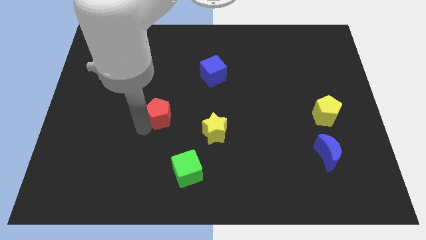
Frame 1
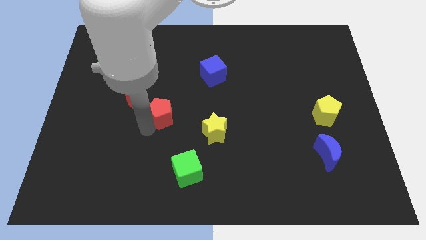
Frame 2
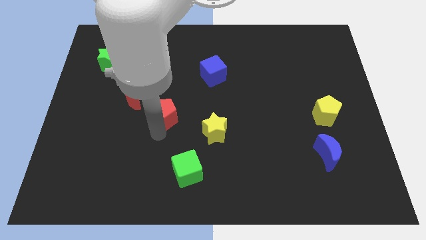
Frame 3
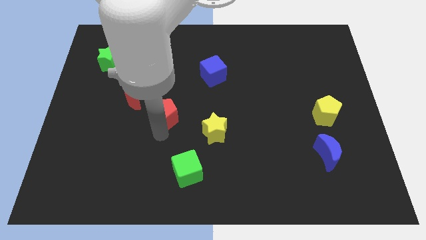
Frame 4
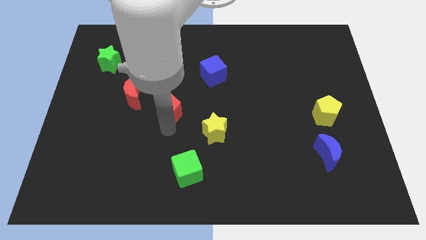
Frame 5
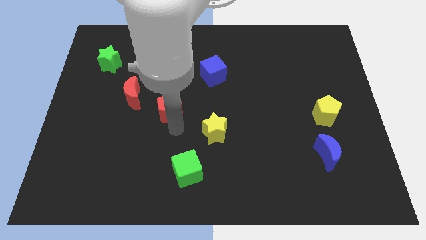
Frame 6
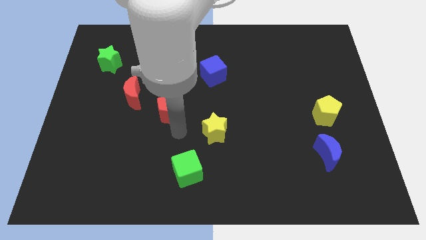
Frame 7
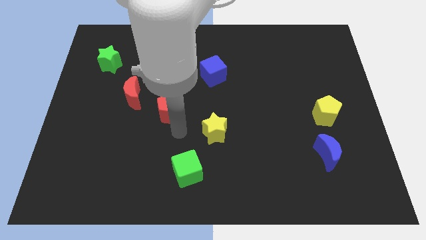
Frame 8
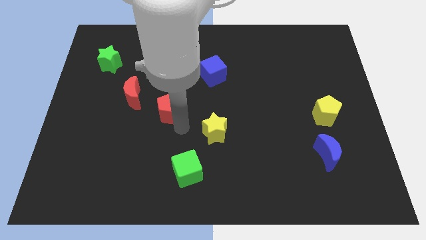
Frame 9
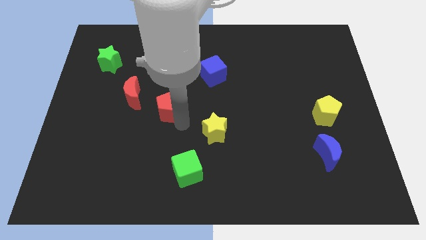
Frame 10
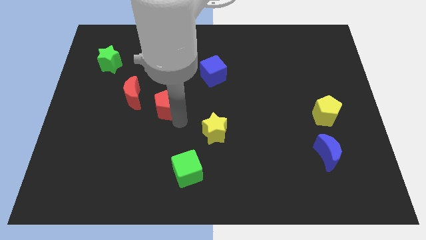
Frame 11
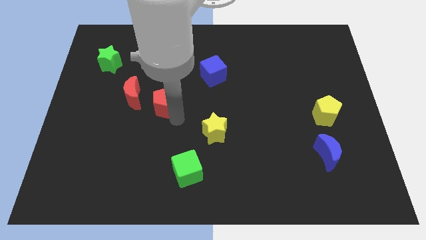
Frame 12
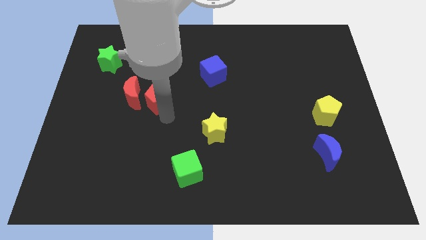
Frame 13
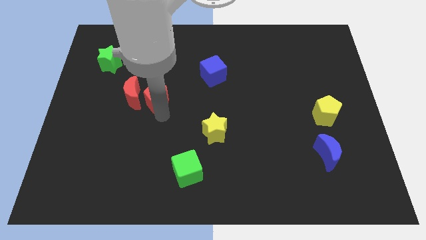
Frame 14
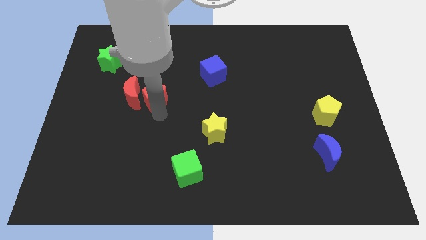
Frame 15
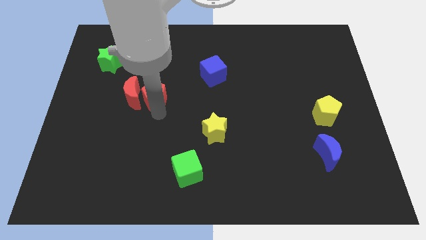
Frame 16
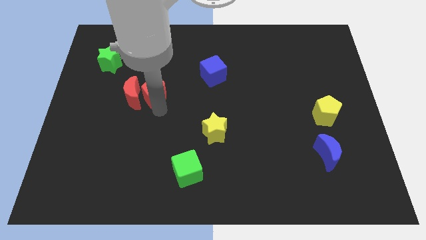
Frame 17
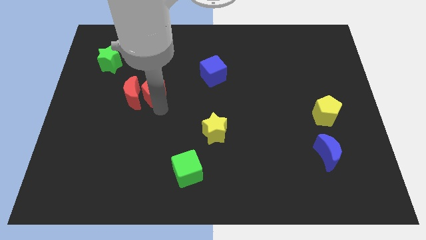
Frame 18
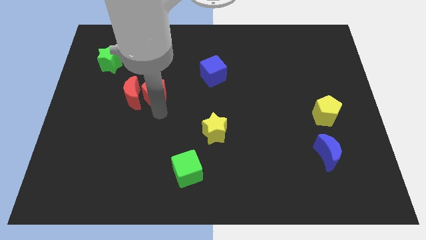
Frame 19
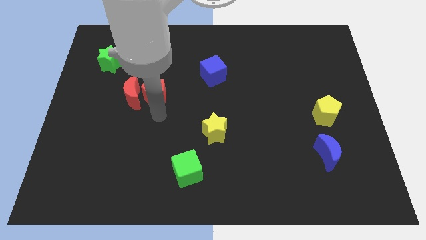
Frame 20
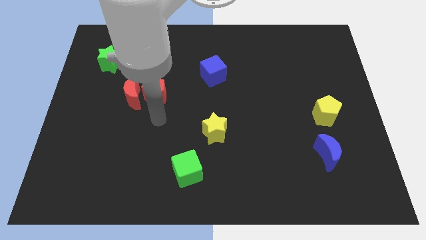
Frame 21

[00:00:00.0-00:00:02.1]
move the red pentagon to the right of the red moon

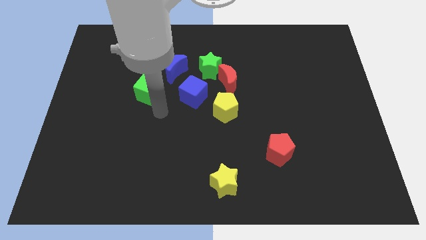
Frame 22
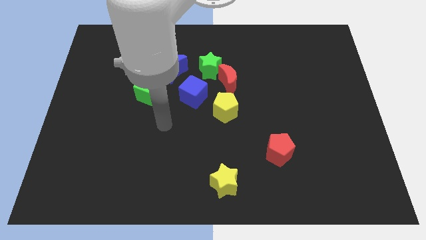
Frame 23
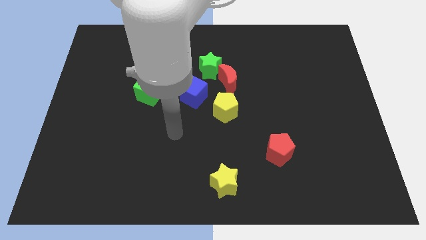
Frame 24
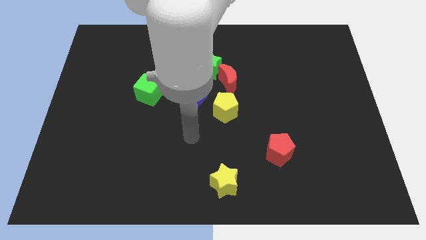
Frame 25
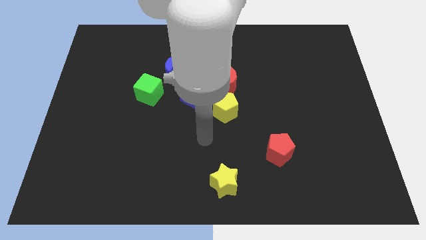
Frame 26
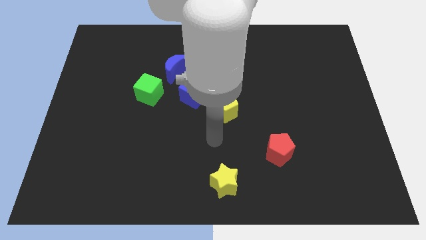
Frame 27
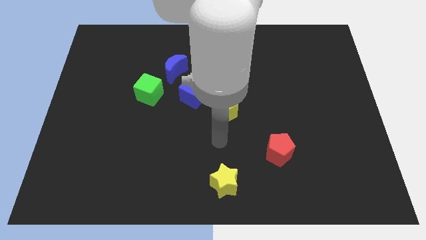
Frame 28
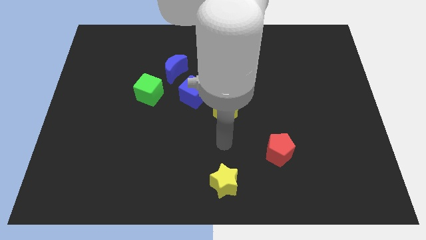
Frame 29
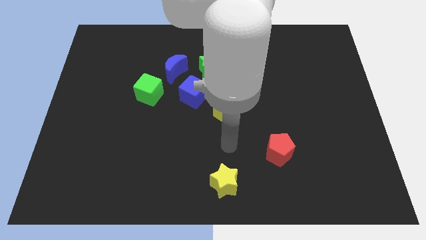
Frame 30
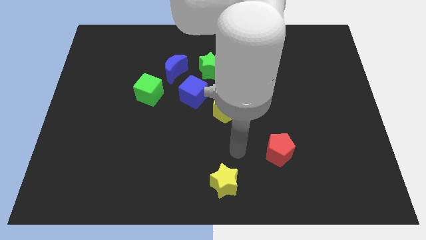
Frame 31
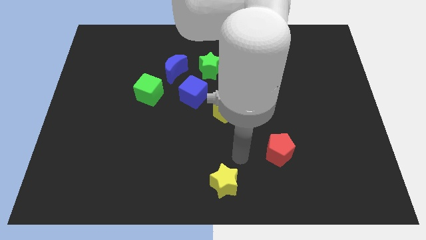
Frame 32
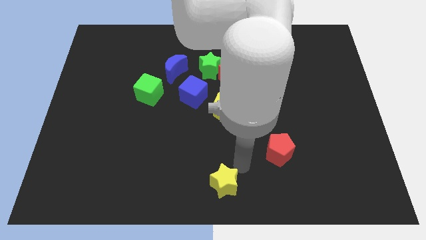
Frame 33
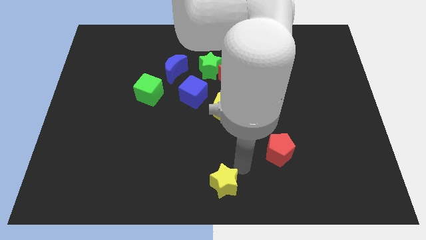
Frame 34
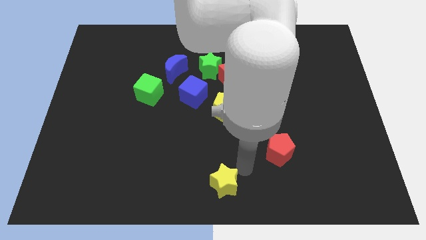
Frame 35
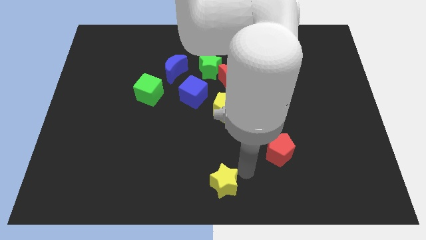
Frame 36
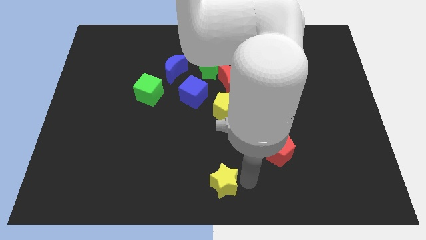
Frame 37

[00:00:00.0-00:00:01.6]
point your arm at the right of the yellow star

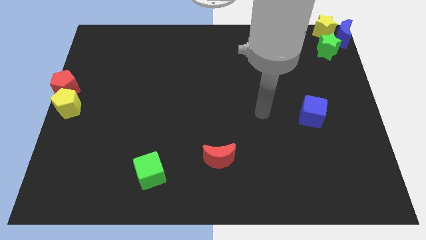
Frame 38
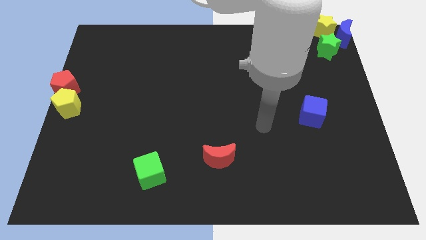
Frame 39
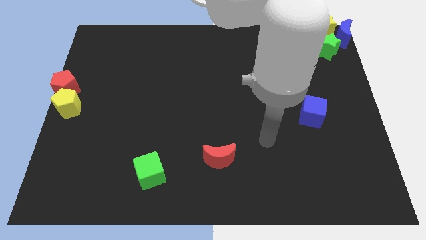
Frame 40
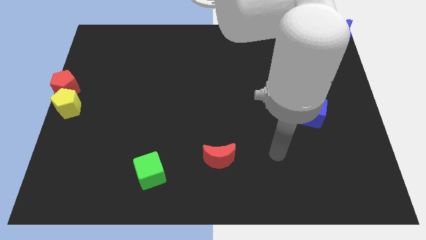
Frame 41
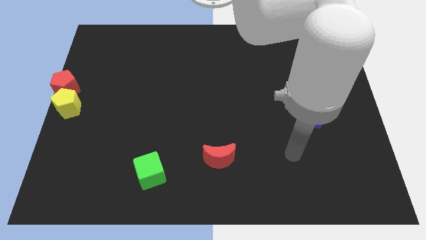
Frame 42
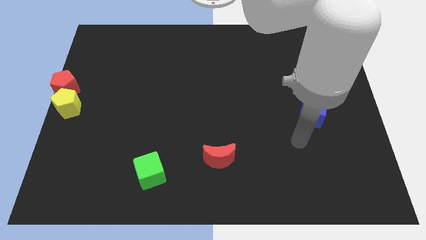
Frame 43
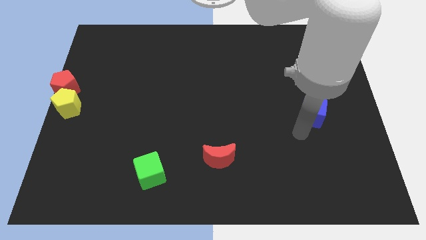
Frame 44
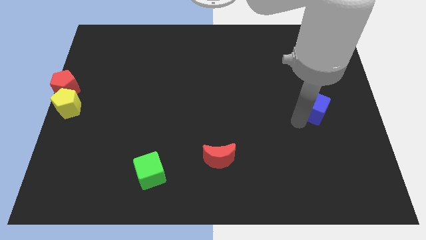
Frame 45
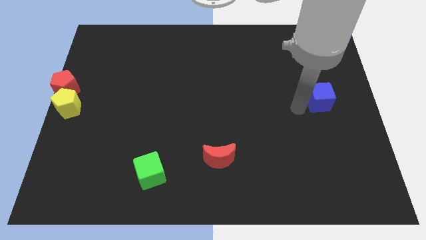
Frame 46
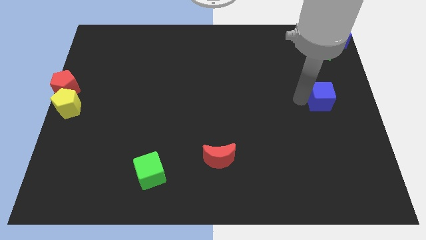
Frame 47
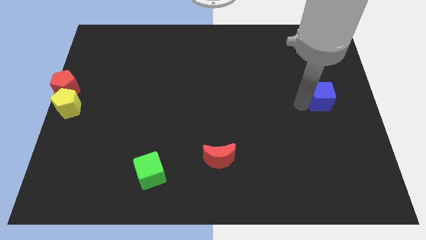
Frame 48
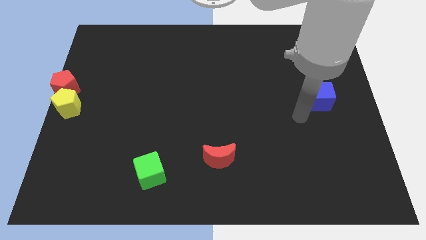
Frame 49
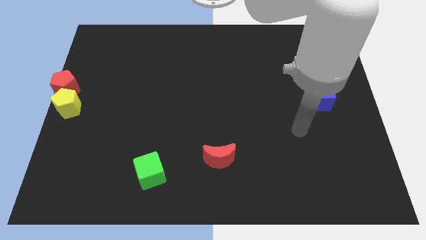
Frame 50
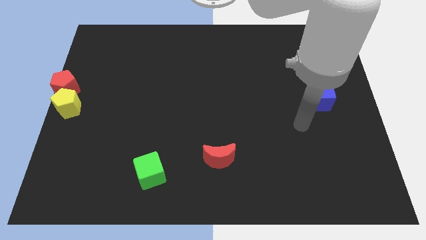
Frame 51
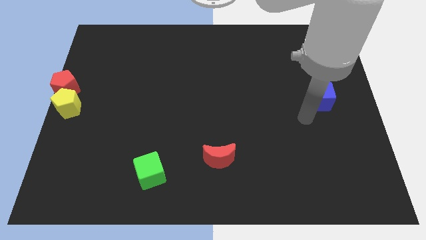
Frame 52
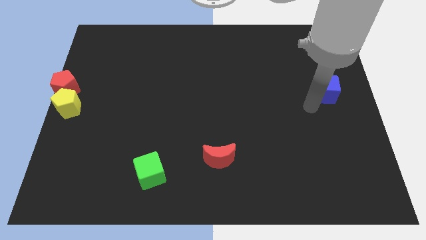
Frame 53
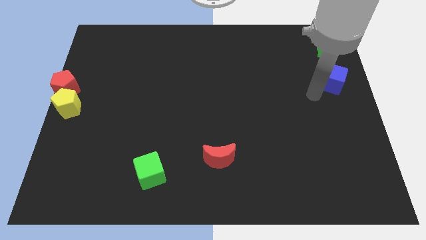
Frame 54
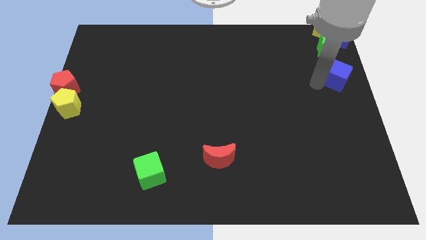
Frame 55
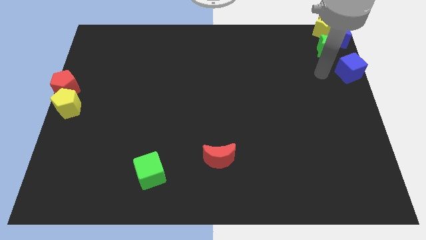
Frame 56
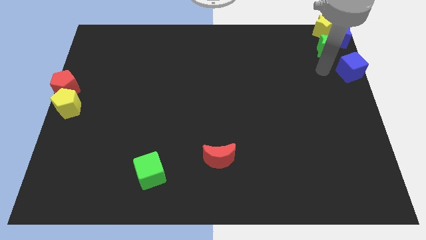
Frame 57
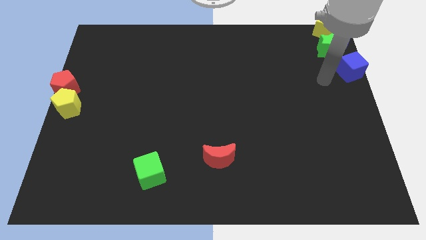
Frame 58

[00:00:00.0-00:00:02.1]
move blue cube to the top left

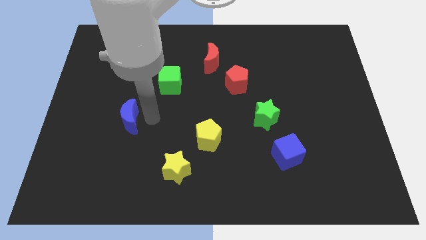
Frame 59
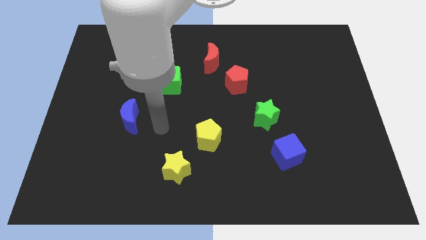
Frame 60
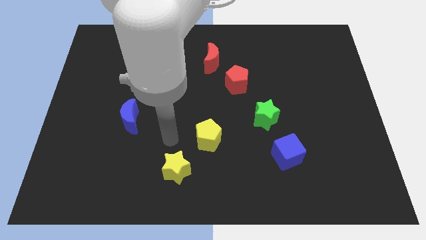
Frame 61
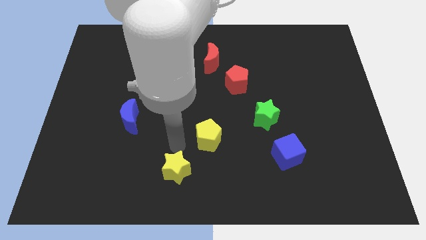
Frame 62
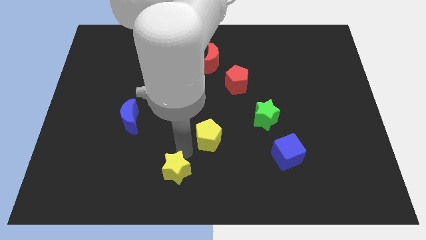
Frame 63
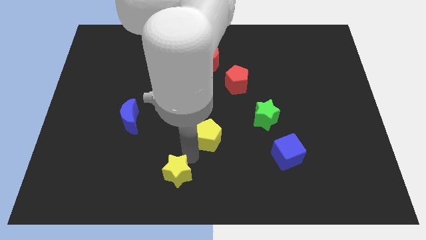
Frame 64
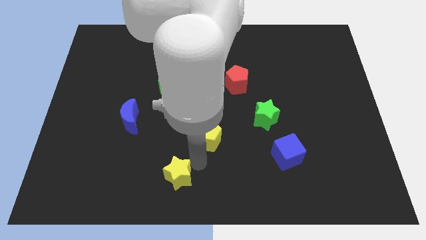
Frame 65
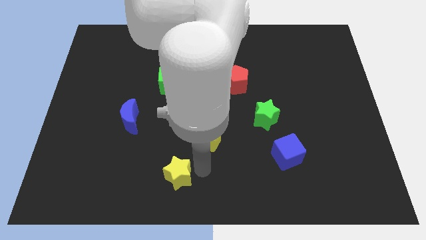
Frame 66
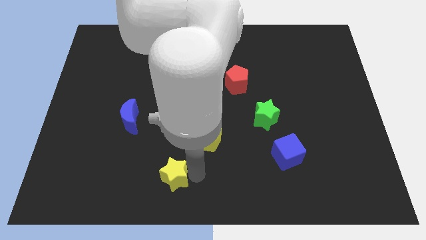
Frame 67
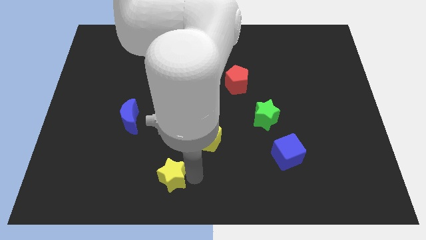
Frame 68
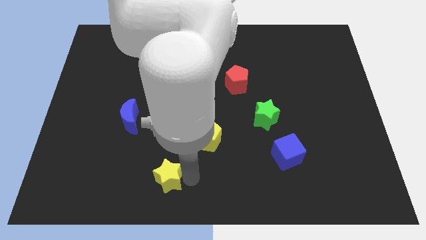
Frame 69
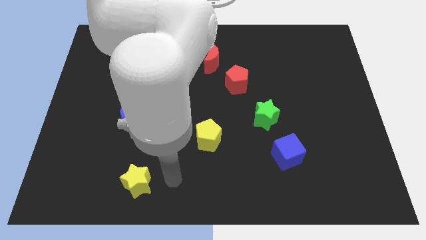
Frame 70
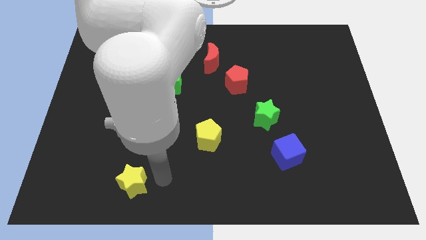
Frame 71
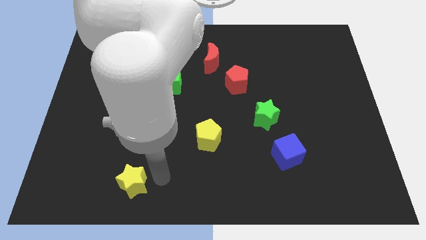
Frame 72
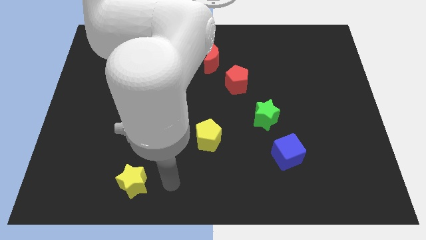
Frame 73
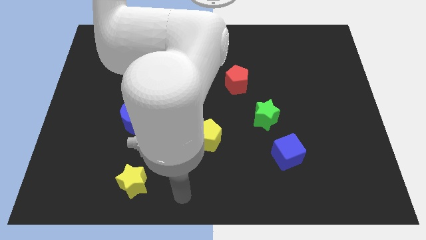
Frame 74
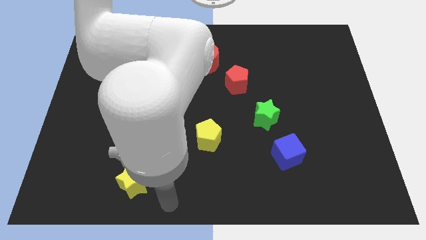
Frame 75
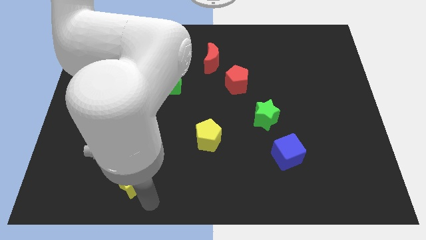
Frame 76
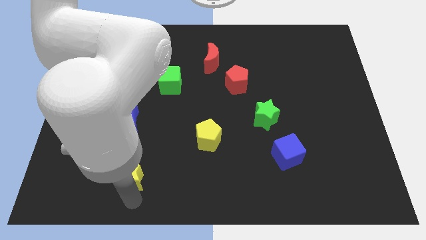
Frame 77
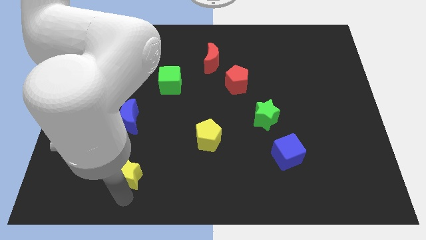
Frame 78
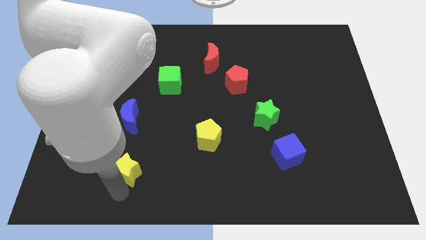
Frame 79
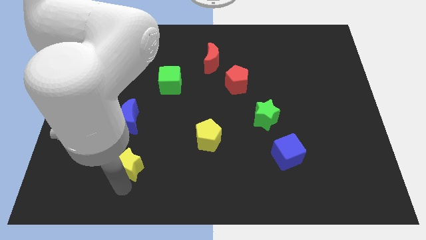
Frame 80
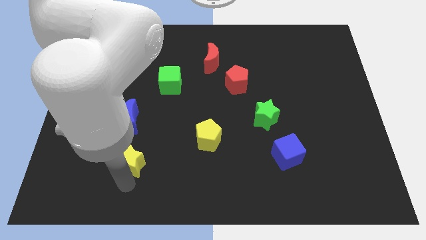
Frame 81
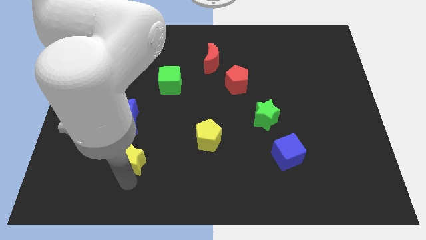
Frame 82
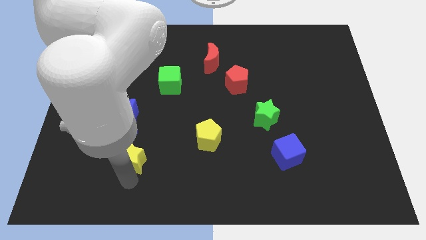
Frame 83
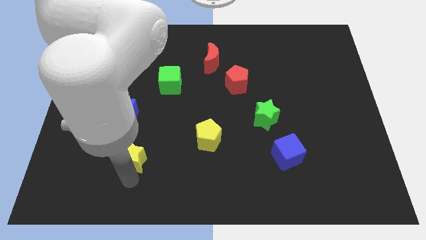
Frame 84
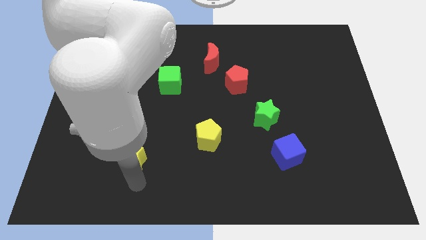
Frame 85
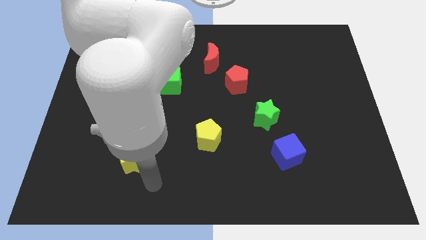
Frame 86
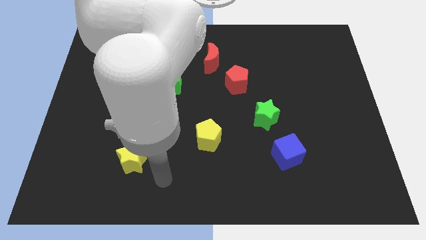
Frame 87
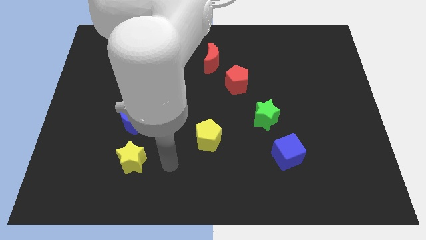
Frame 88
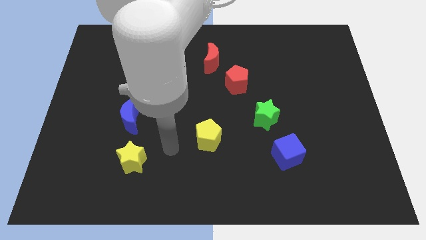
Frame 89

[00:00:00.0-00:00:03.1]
place the yellow star to the bottom of blue crescent
